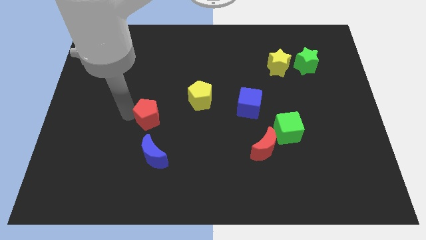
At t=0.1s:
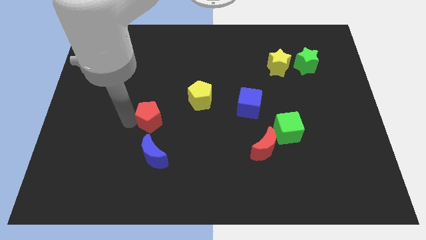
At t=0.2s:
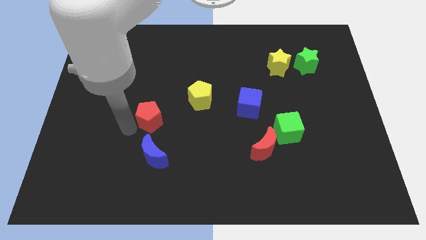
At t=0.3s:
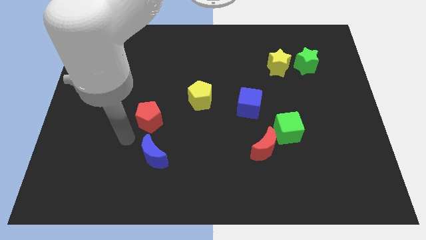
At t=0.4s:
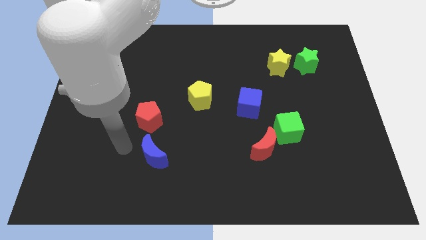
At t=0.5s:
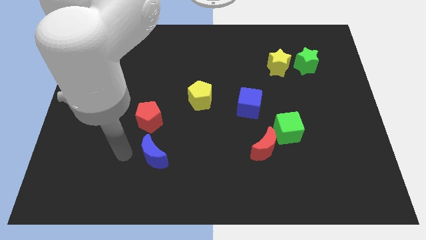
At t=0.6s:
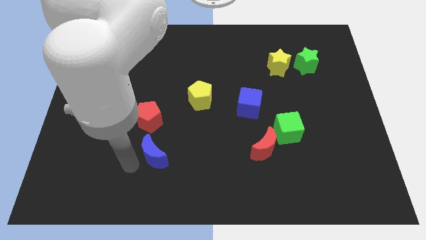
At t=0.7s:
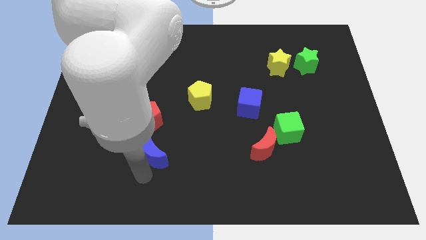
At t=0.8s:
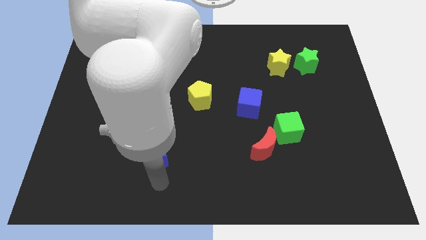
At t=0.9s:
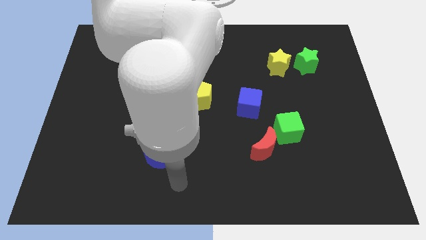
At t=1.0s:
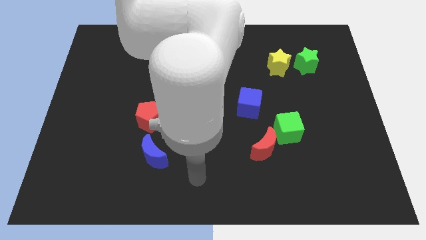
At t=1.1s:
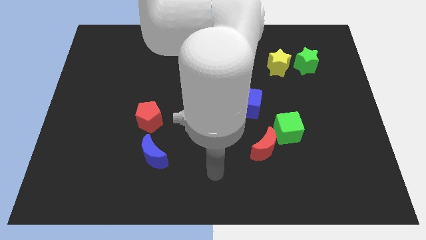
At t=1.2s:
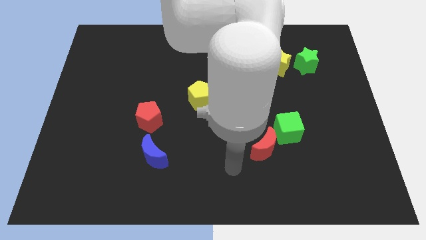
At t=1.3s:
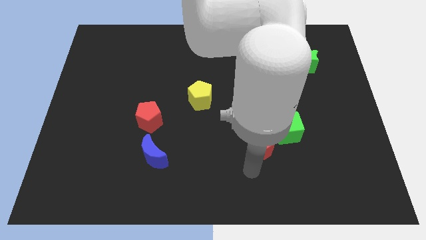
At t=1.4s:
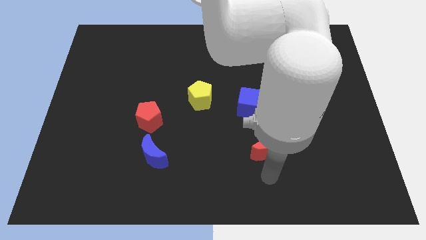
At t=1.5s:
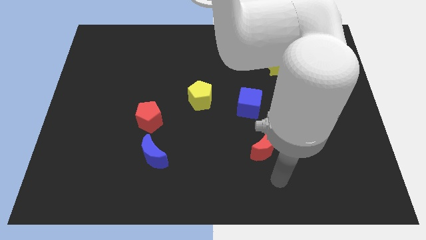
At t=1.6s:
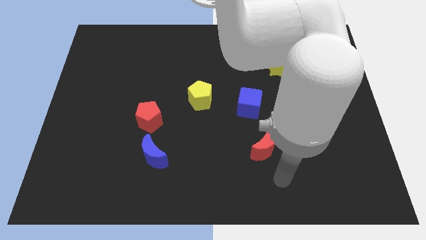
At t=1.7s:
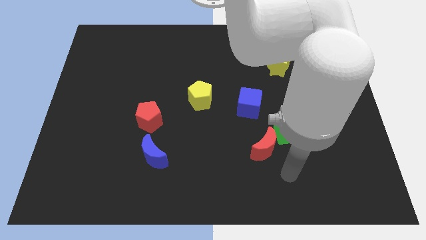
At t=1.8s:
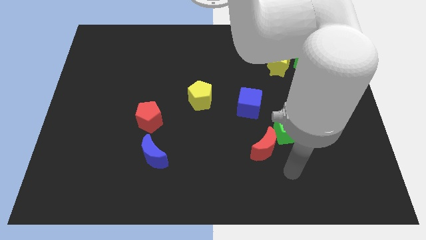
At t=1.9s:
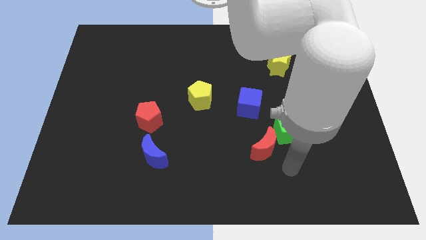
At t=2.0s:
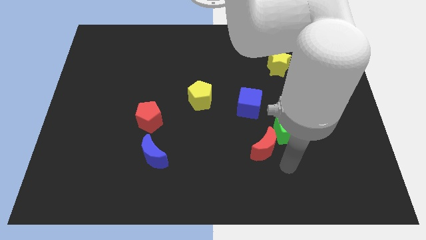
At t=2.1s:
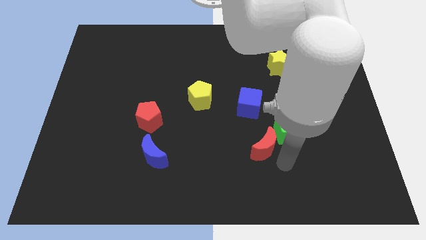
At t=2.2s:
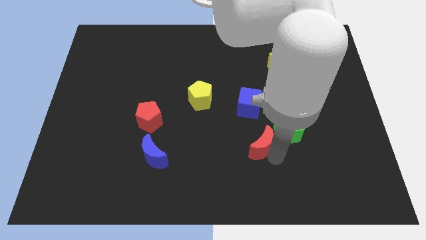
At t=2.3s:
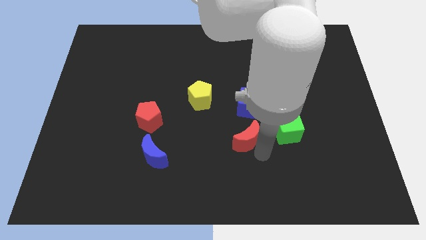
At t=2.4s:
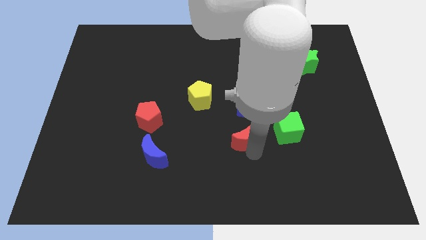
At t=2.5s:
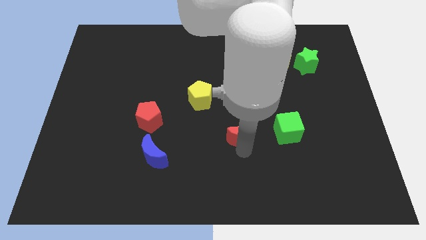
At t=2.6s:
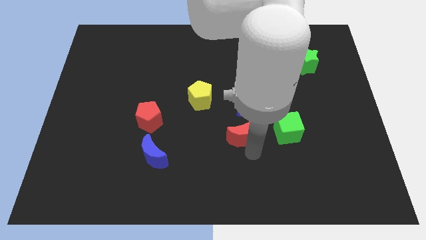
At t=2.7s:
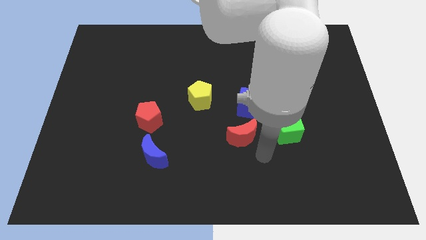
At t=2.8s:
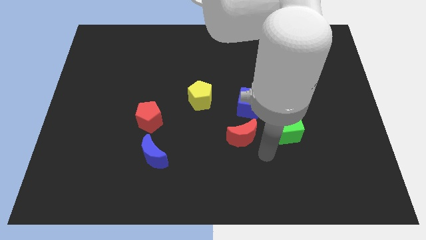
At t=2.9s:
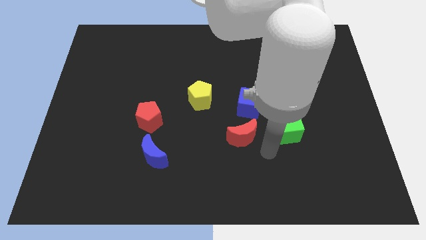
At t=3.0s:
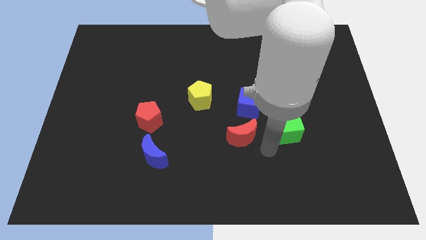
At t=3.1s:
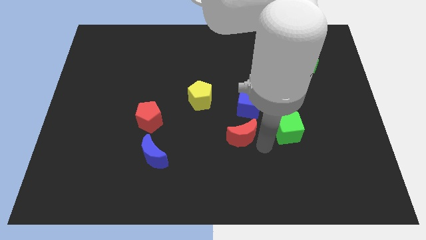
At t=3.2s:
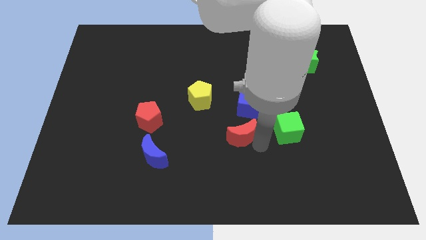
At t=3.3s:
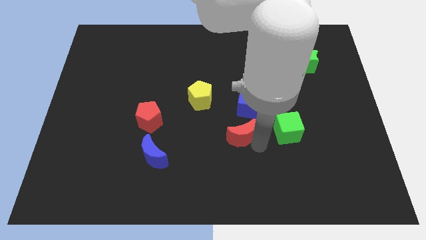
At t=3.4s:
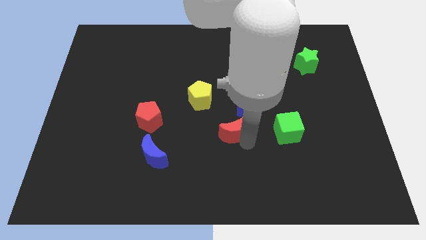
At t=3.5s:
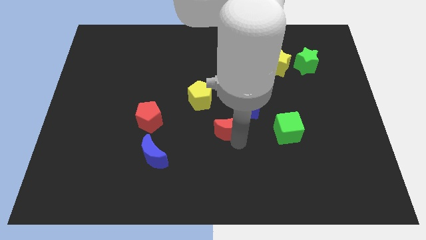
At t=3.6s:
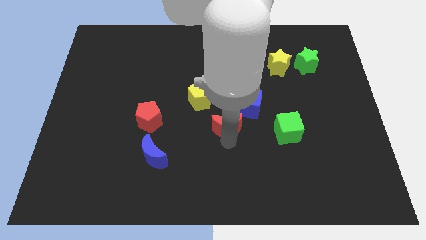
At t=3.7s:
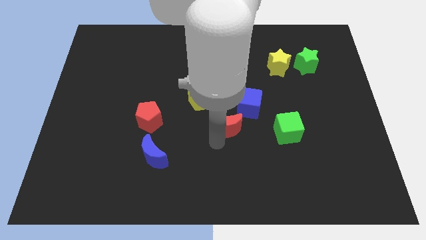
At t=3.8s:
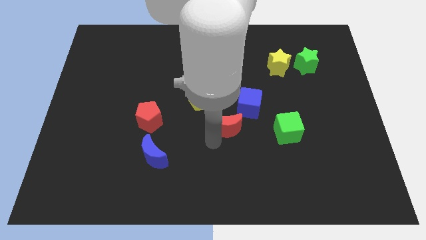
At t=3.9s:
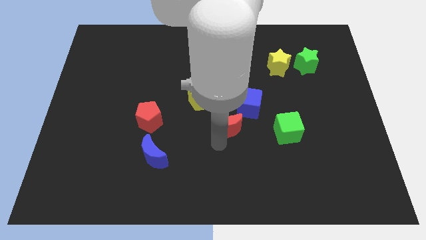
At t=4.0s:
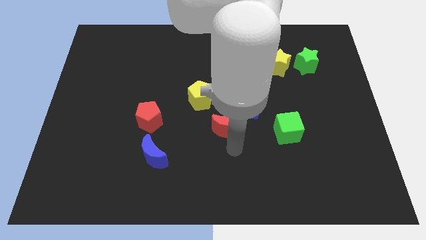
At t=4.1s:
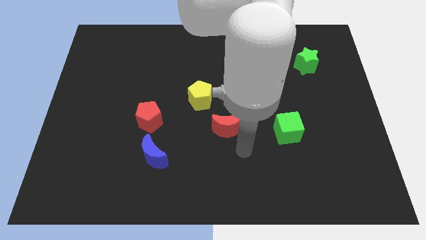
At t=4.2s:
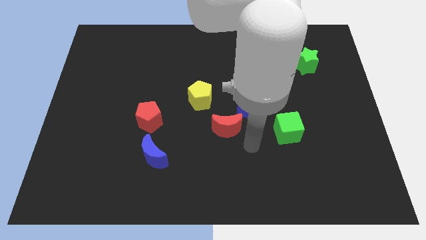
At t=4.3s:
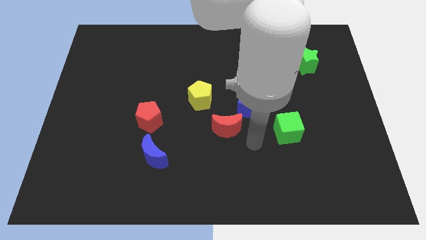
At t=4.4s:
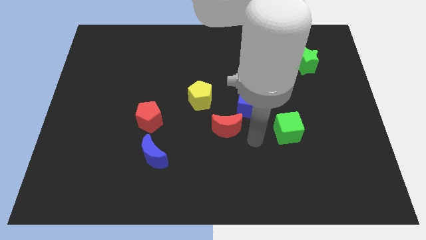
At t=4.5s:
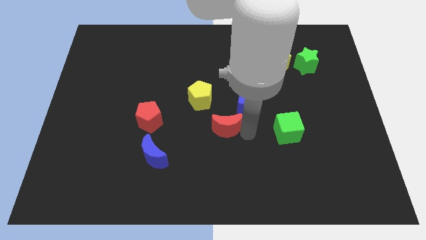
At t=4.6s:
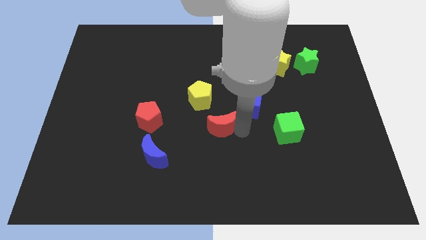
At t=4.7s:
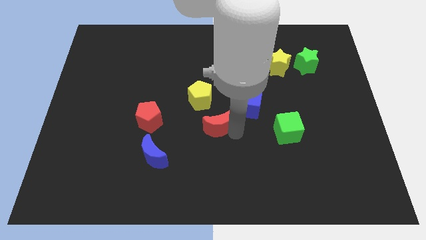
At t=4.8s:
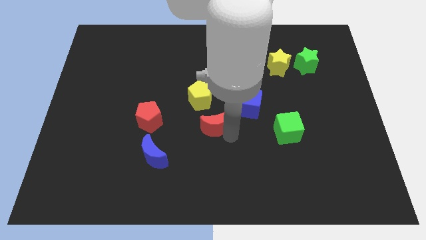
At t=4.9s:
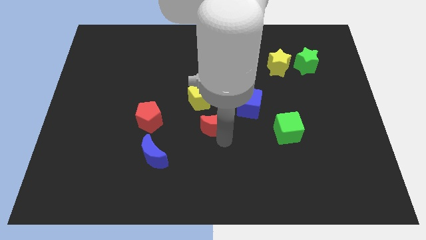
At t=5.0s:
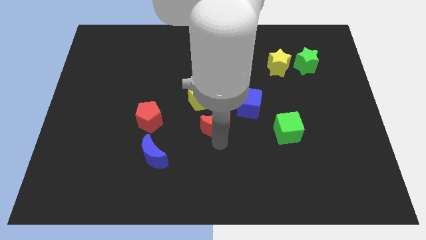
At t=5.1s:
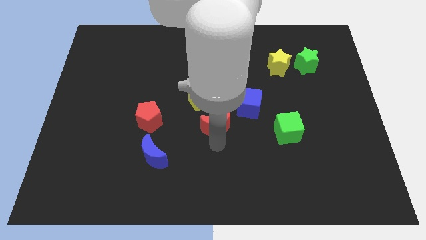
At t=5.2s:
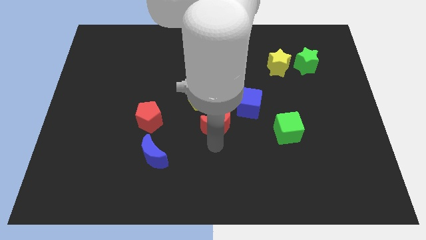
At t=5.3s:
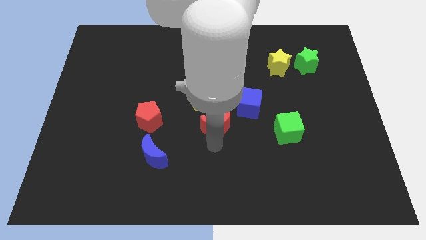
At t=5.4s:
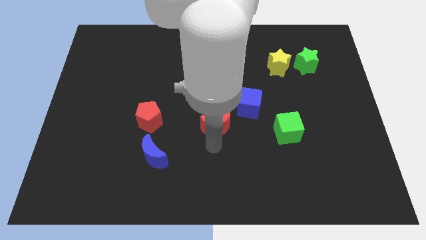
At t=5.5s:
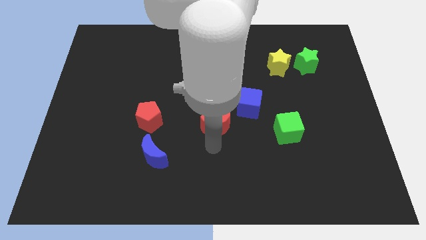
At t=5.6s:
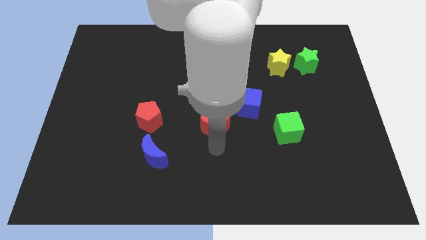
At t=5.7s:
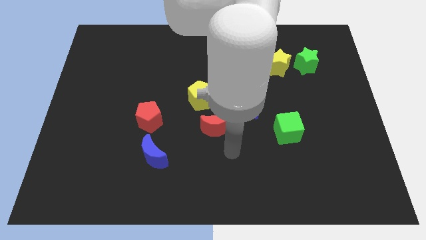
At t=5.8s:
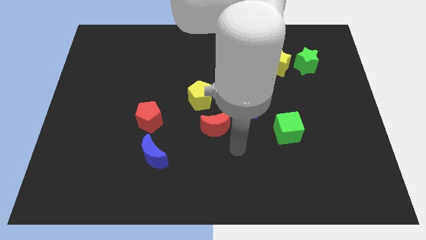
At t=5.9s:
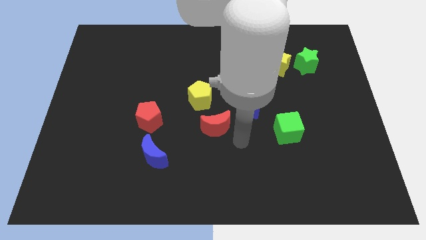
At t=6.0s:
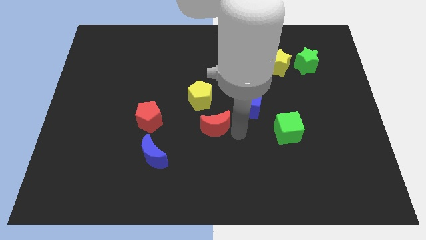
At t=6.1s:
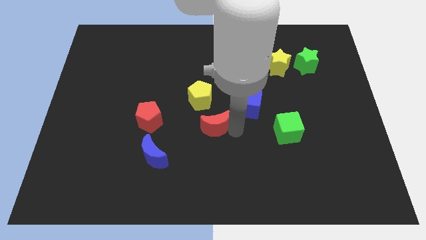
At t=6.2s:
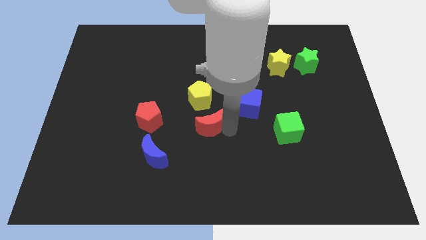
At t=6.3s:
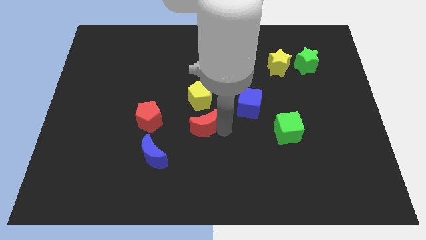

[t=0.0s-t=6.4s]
place the red moon below the yellow pentagon

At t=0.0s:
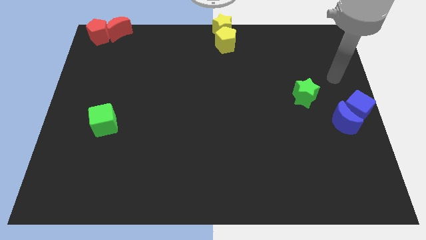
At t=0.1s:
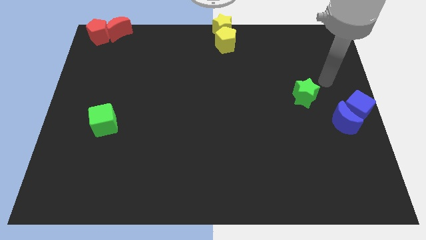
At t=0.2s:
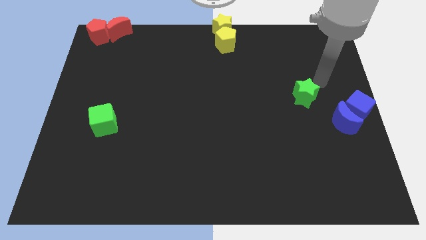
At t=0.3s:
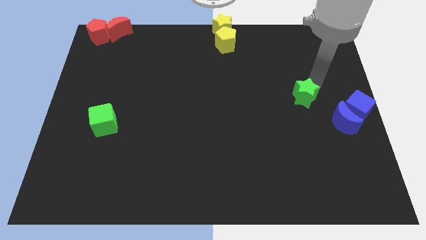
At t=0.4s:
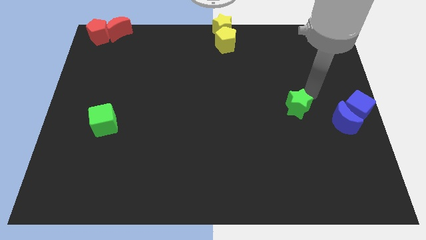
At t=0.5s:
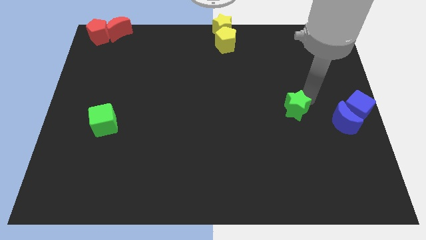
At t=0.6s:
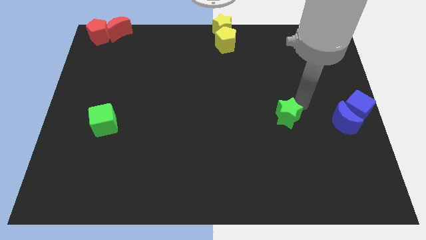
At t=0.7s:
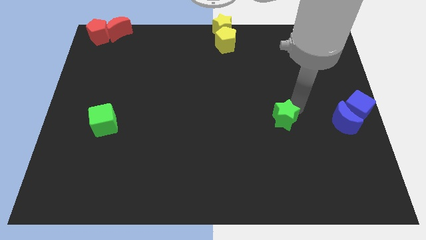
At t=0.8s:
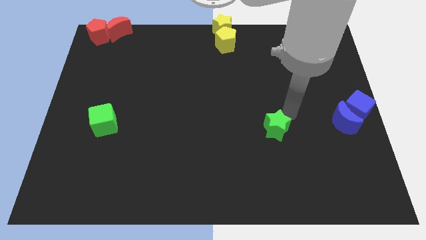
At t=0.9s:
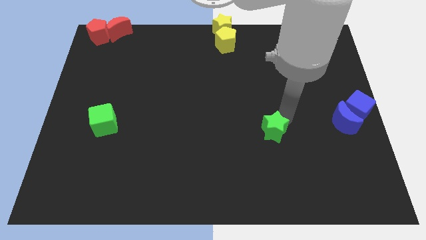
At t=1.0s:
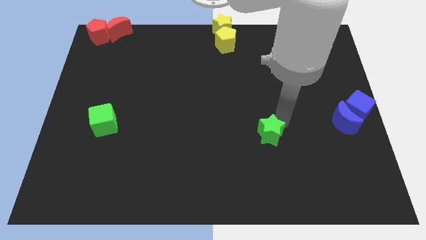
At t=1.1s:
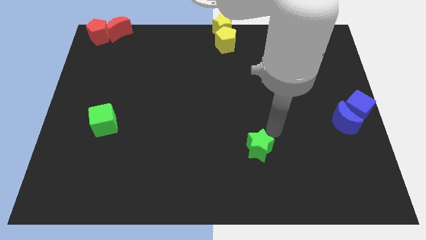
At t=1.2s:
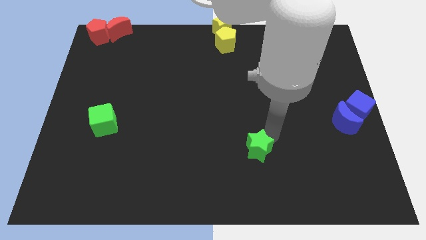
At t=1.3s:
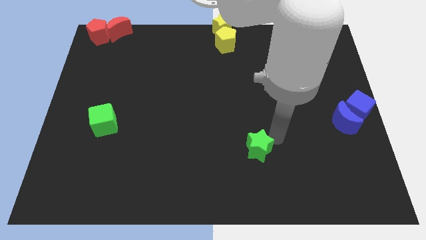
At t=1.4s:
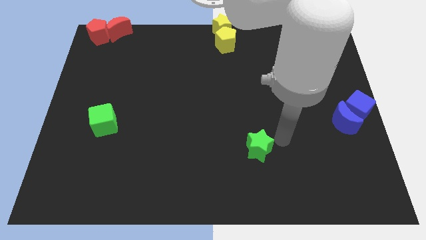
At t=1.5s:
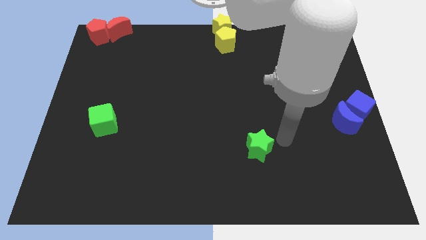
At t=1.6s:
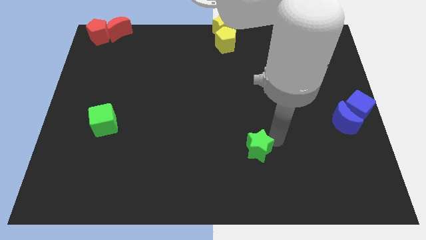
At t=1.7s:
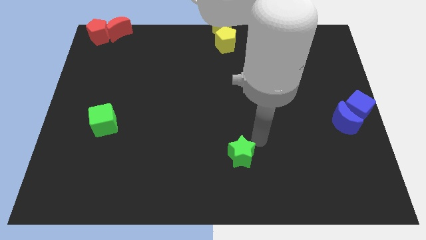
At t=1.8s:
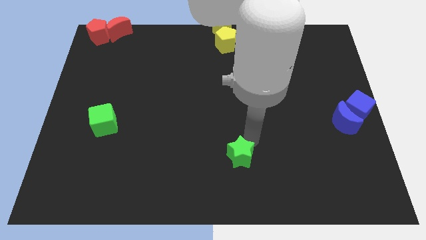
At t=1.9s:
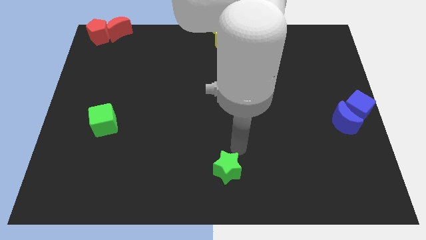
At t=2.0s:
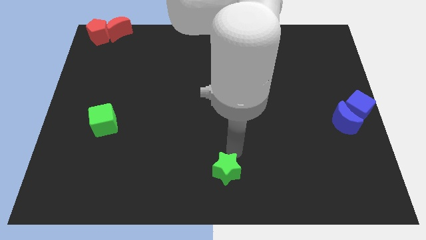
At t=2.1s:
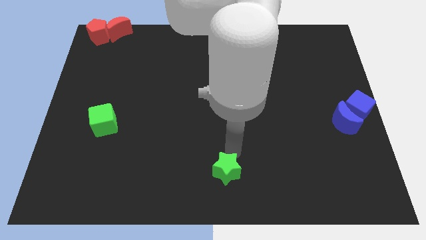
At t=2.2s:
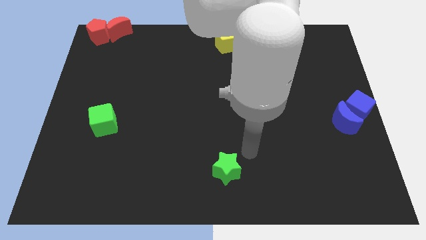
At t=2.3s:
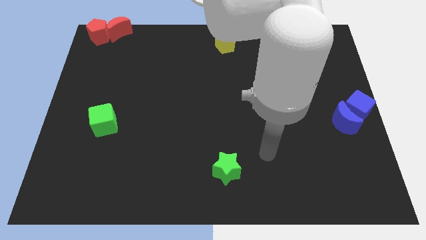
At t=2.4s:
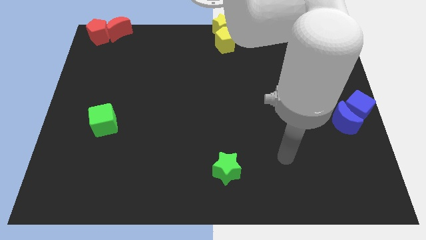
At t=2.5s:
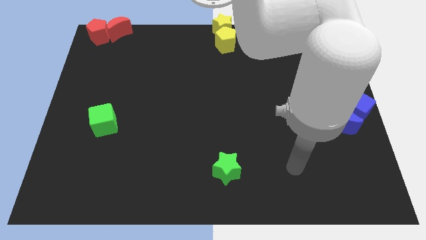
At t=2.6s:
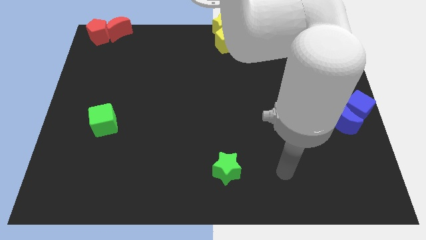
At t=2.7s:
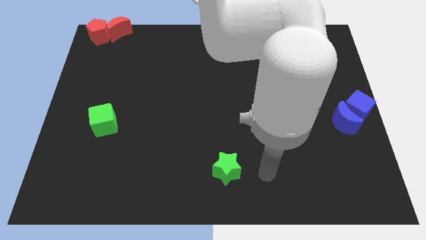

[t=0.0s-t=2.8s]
push the green star towards the bottom center
